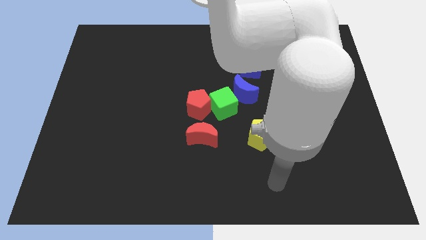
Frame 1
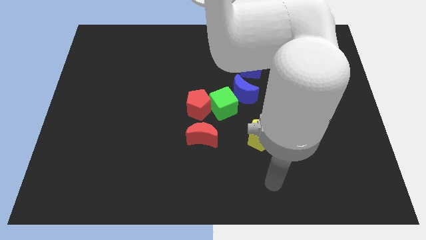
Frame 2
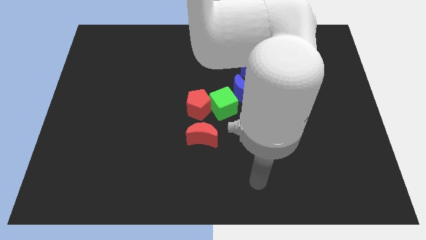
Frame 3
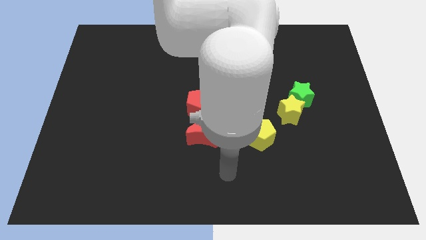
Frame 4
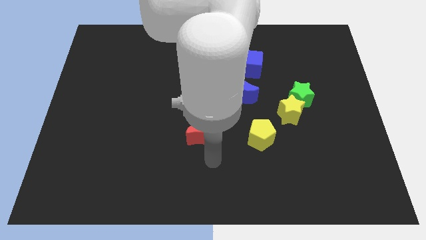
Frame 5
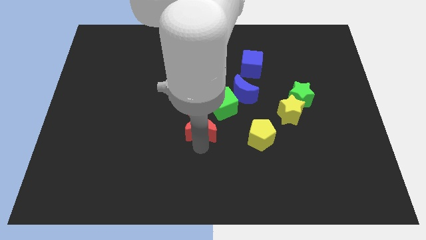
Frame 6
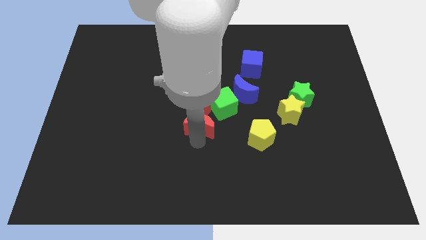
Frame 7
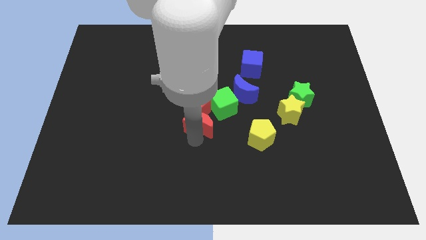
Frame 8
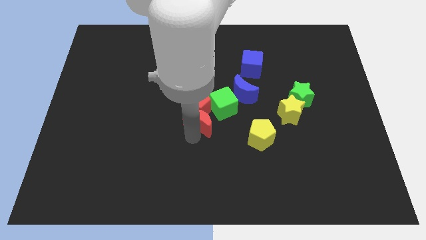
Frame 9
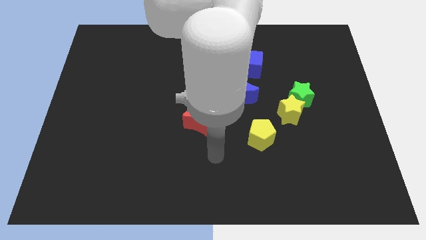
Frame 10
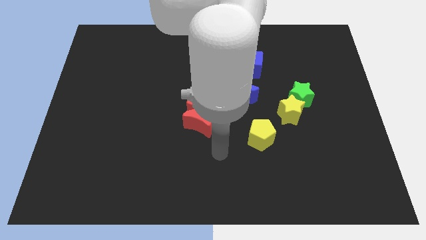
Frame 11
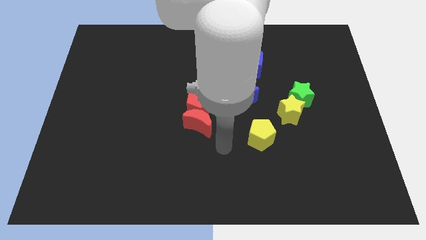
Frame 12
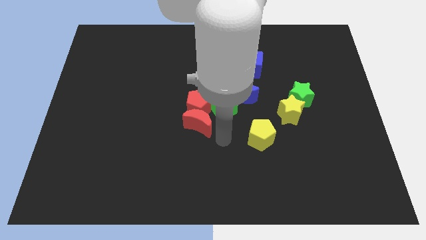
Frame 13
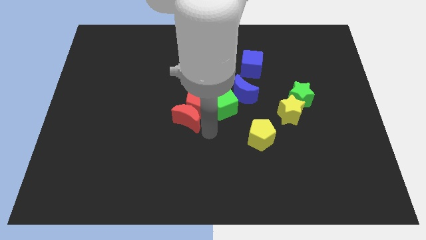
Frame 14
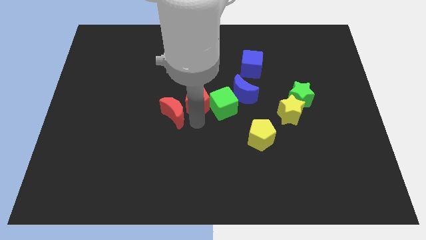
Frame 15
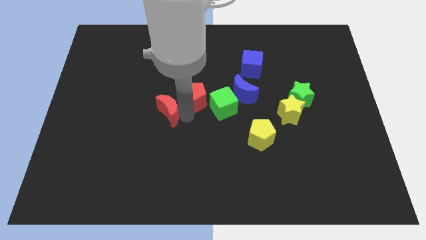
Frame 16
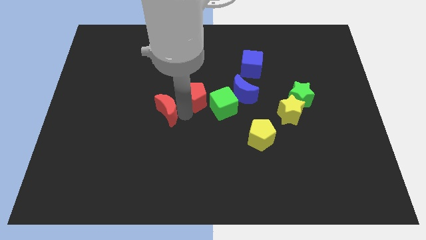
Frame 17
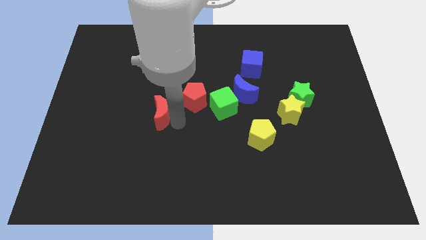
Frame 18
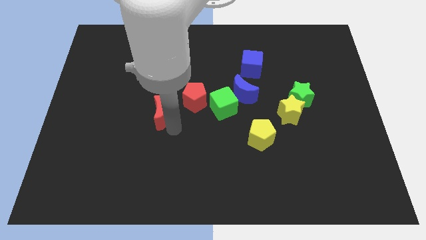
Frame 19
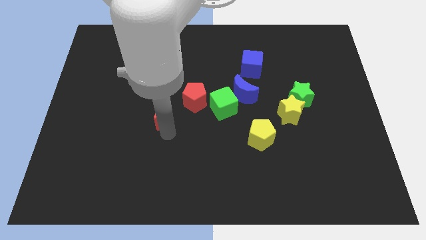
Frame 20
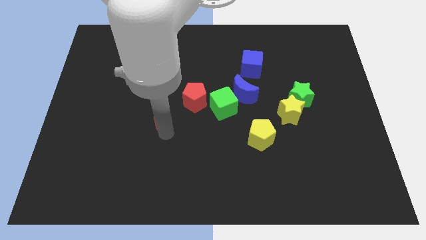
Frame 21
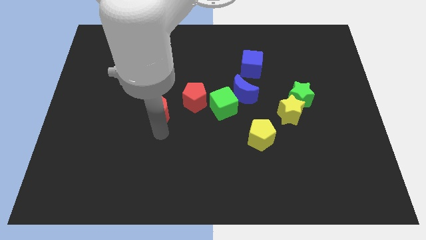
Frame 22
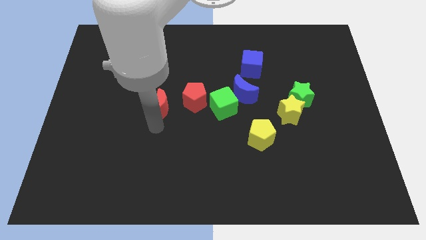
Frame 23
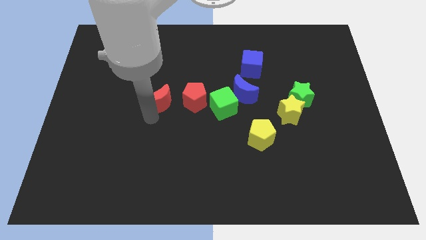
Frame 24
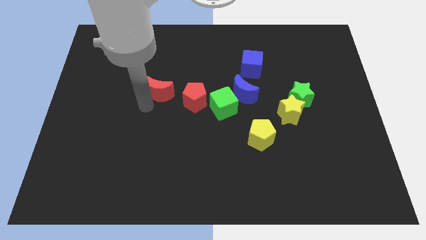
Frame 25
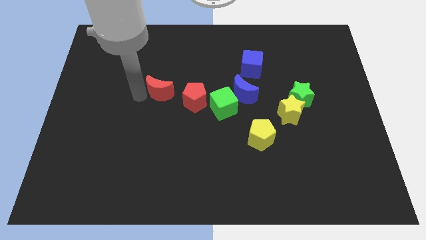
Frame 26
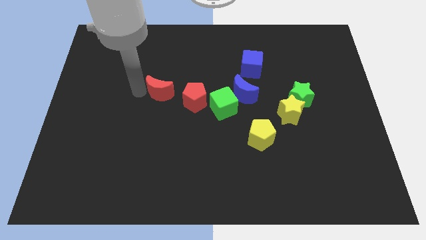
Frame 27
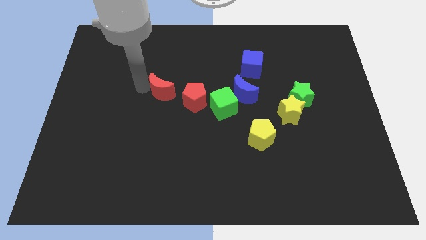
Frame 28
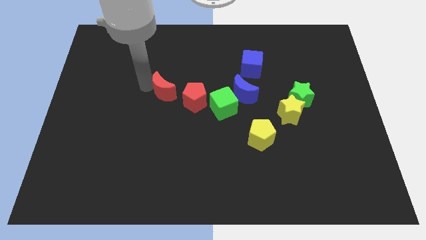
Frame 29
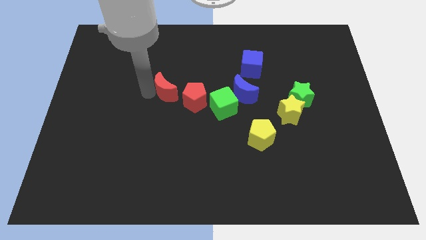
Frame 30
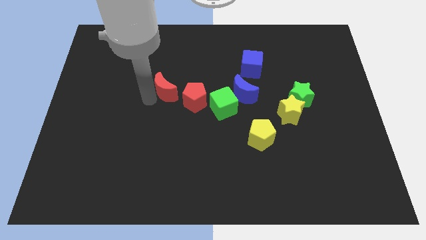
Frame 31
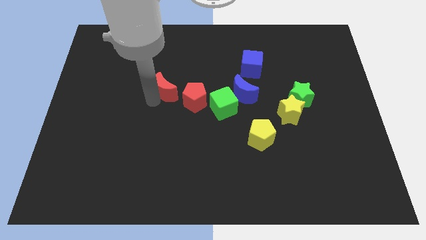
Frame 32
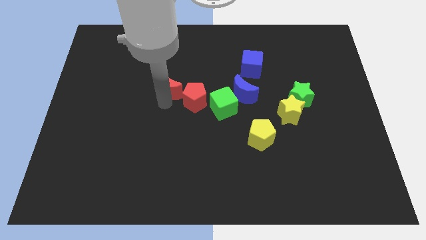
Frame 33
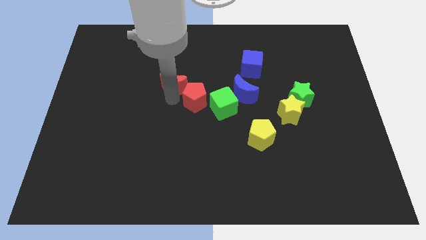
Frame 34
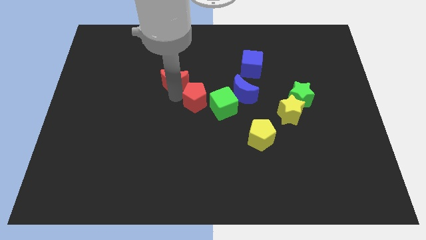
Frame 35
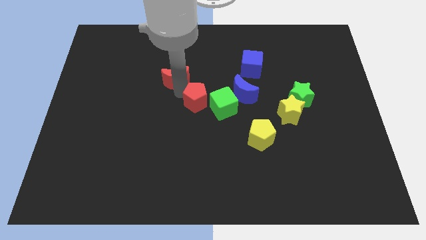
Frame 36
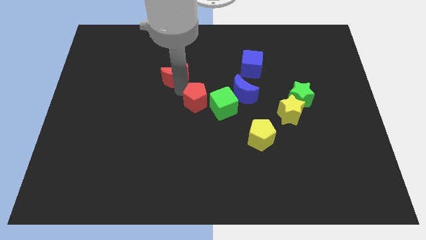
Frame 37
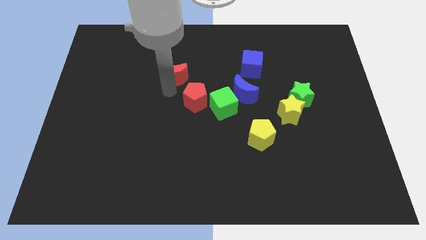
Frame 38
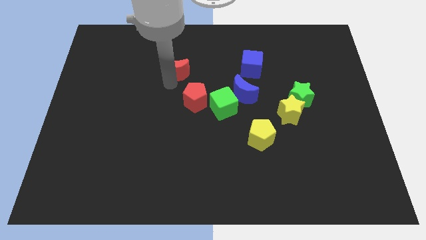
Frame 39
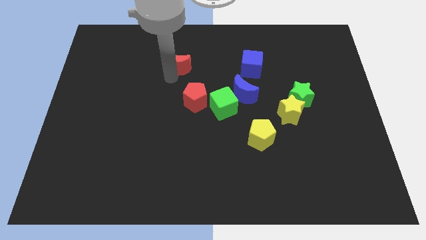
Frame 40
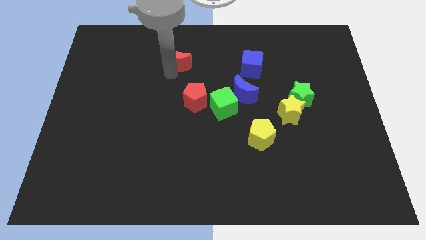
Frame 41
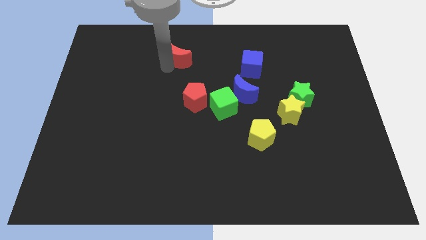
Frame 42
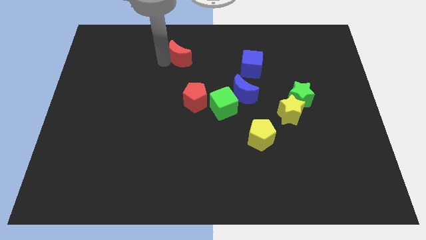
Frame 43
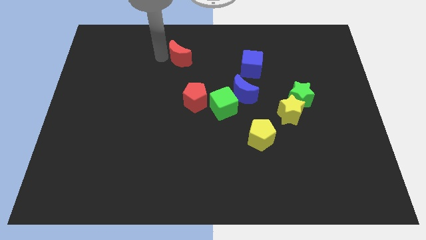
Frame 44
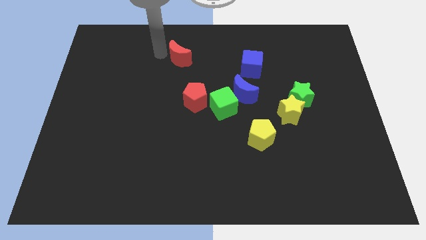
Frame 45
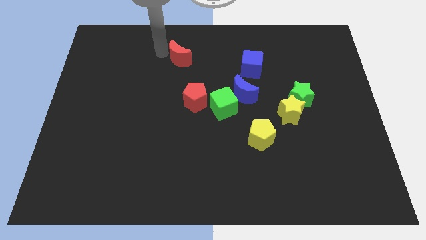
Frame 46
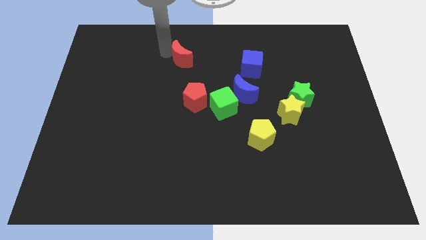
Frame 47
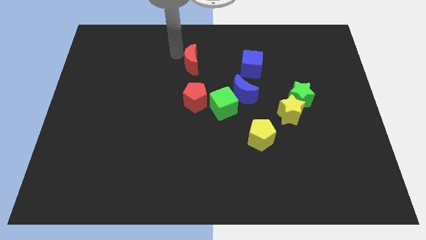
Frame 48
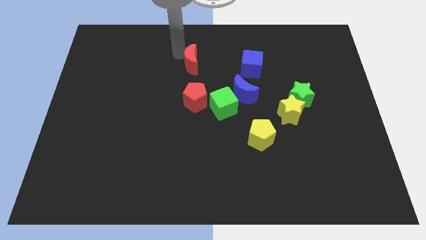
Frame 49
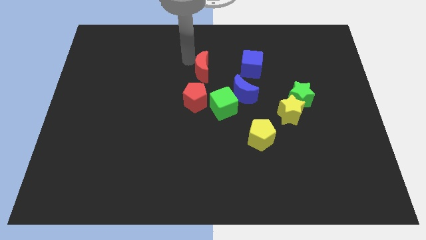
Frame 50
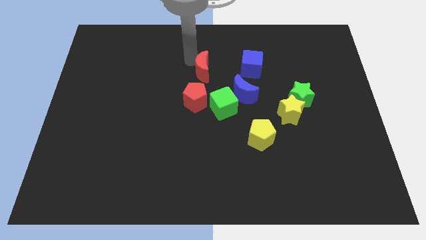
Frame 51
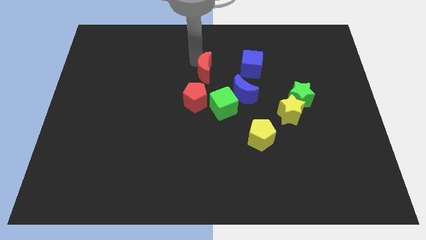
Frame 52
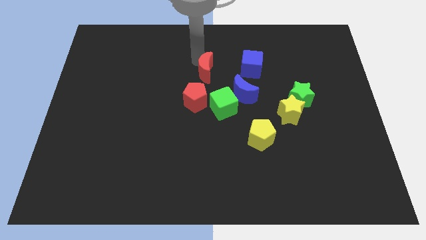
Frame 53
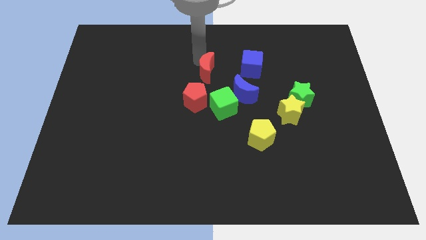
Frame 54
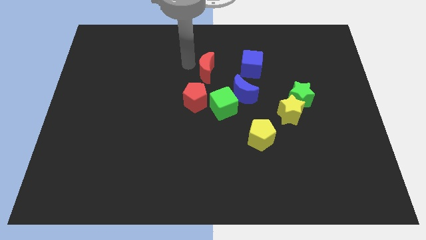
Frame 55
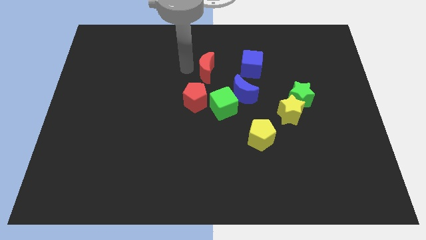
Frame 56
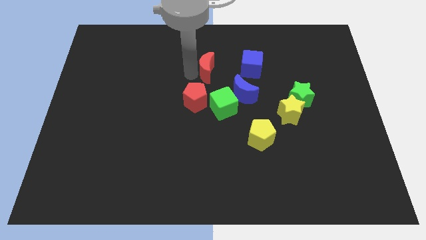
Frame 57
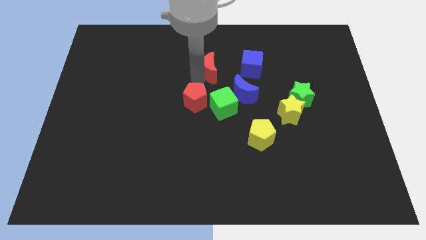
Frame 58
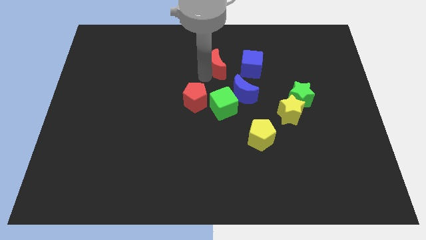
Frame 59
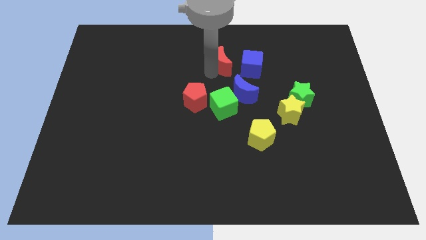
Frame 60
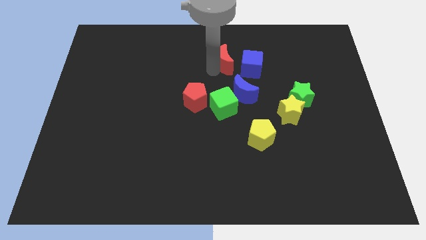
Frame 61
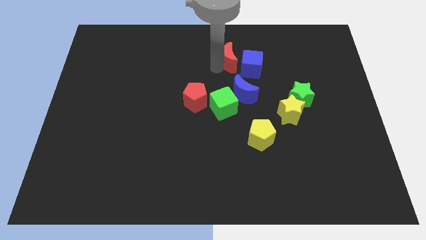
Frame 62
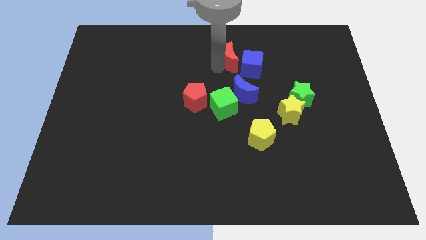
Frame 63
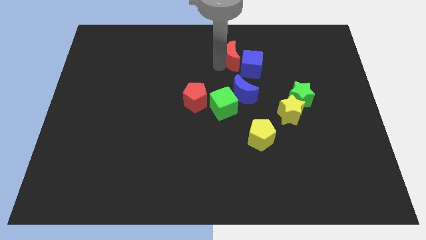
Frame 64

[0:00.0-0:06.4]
slide the red moon next to the blue cube

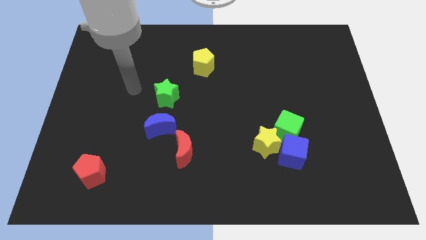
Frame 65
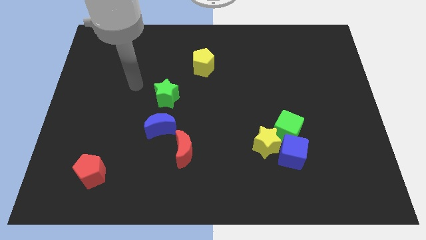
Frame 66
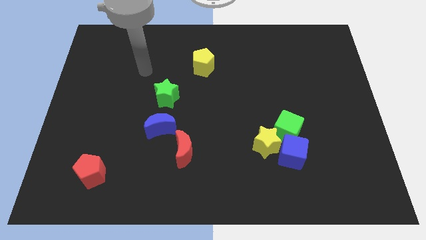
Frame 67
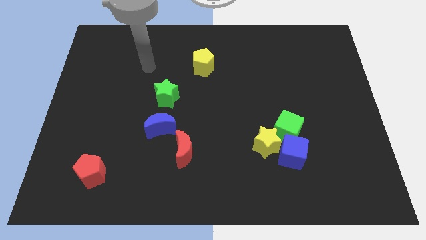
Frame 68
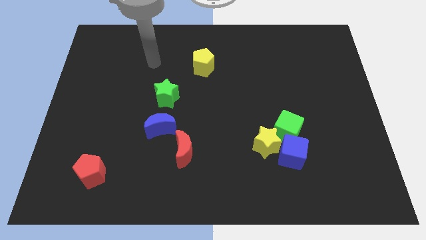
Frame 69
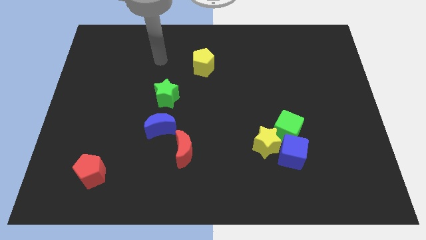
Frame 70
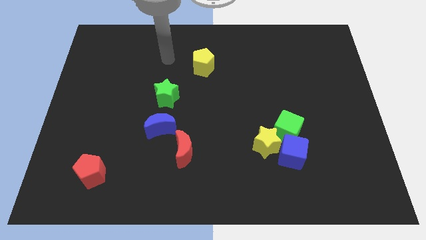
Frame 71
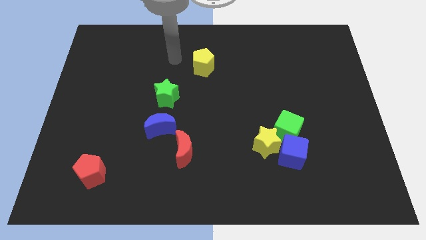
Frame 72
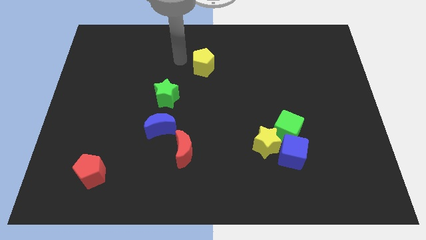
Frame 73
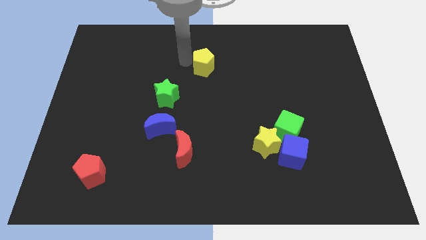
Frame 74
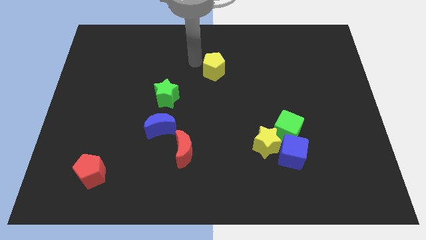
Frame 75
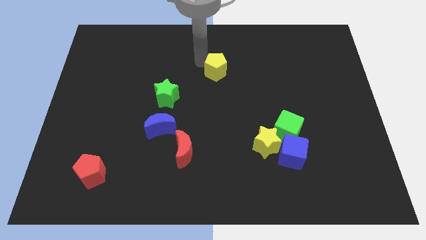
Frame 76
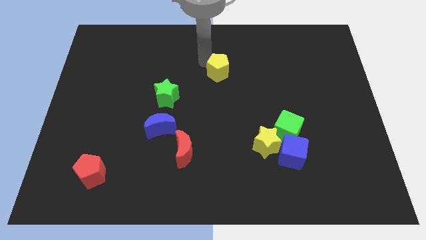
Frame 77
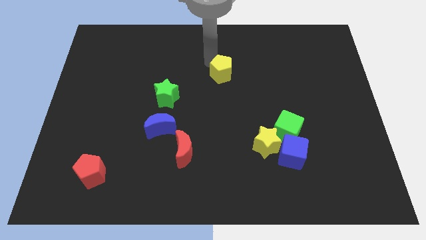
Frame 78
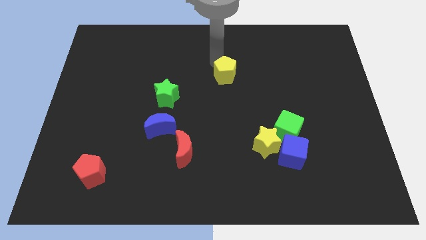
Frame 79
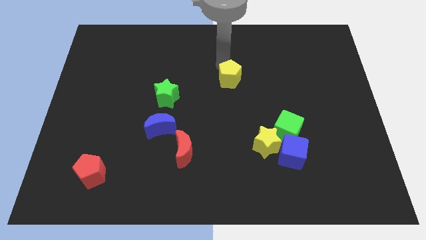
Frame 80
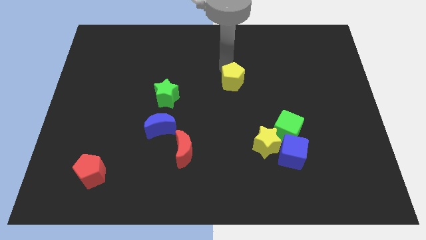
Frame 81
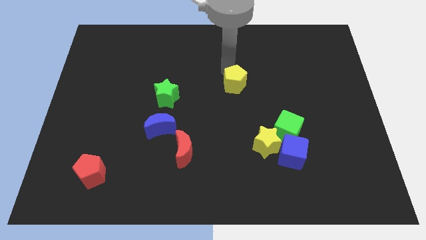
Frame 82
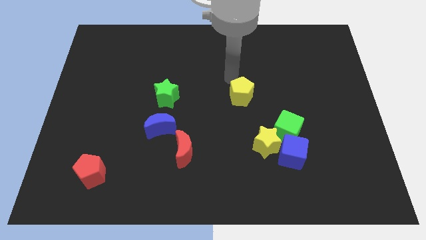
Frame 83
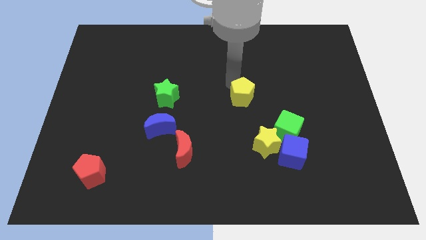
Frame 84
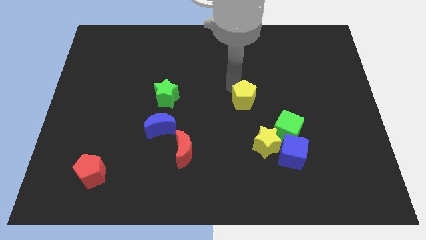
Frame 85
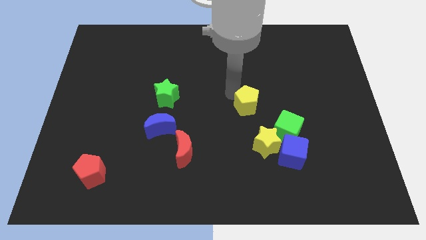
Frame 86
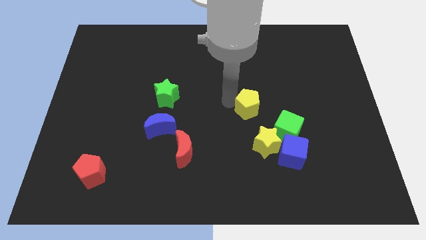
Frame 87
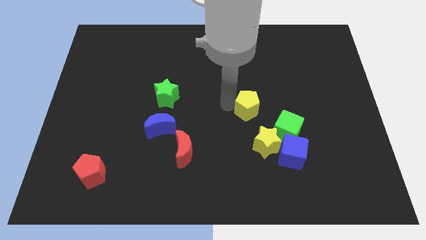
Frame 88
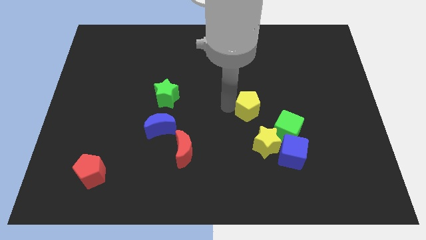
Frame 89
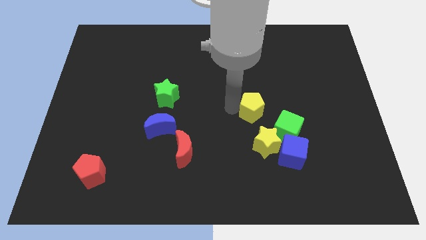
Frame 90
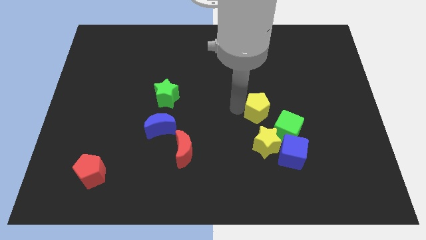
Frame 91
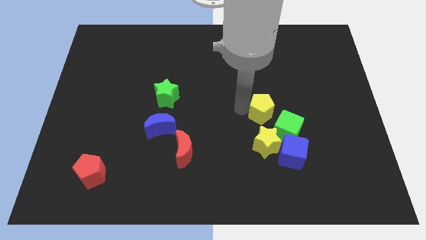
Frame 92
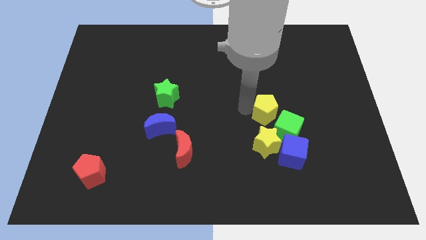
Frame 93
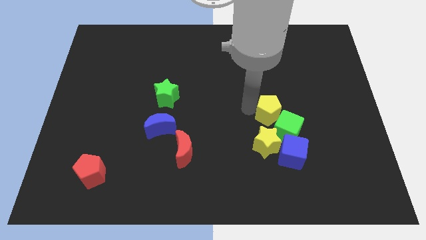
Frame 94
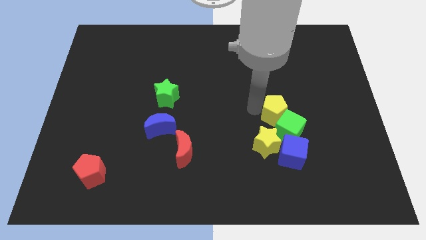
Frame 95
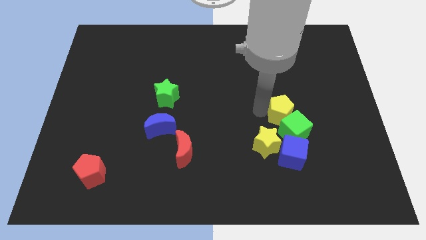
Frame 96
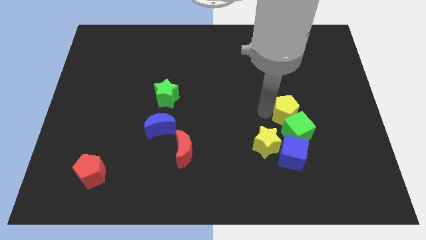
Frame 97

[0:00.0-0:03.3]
move the yellow pentagon next to the green cube
